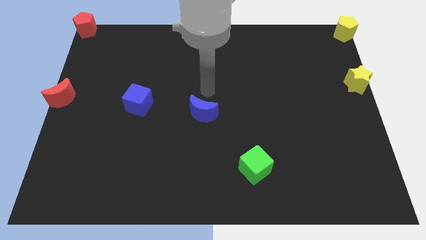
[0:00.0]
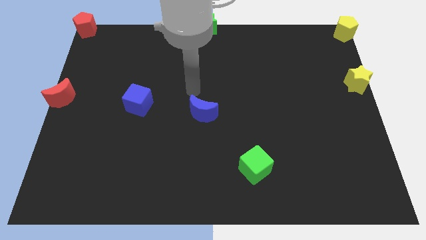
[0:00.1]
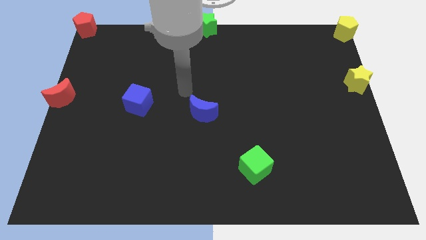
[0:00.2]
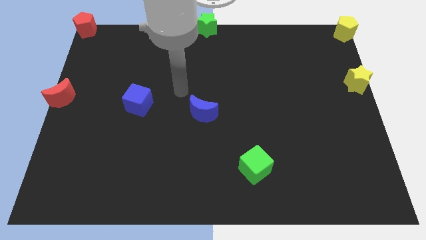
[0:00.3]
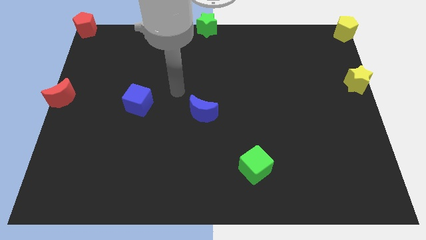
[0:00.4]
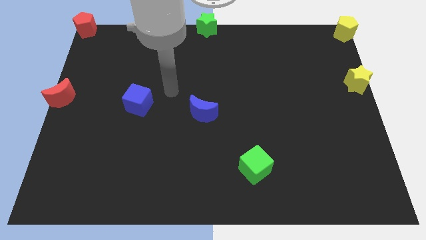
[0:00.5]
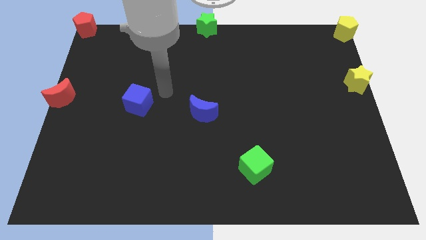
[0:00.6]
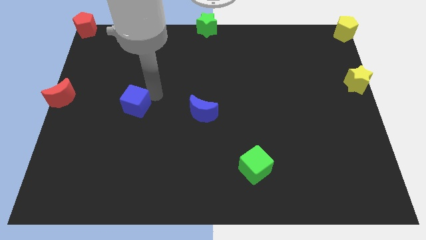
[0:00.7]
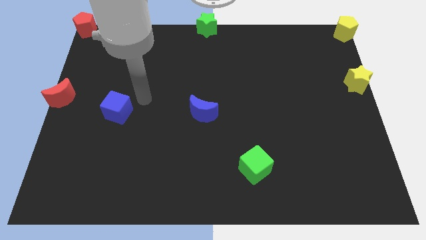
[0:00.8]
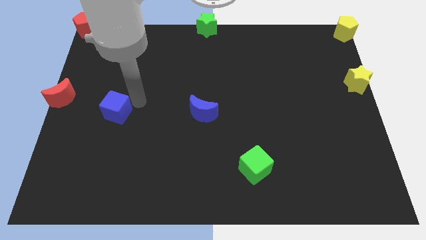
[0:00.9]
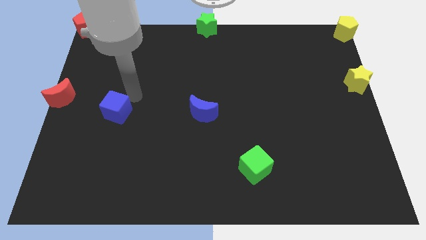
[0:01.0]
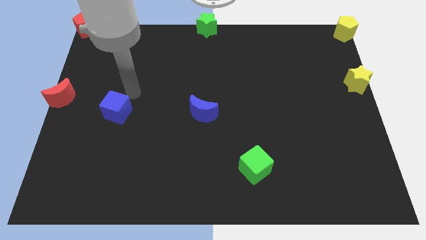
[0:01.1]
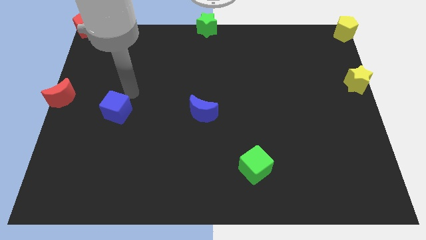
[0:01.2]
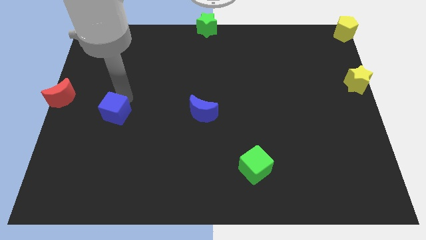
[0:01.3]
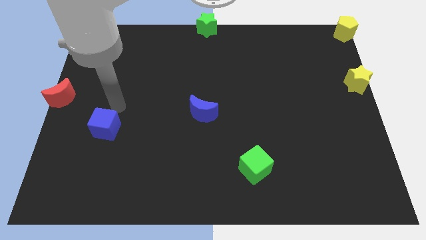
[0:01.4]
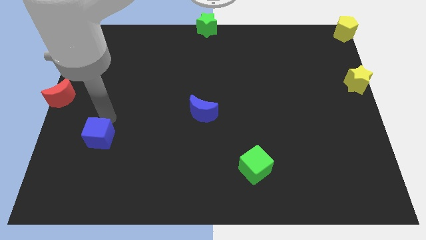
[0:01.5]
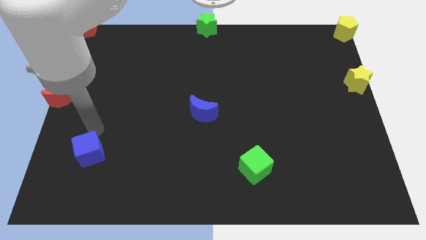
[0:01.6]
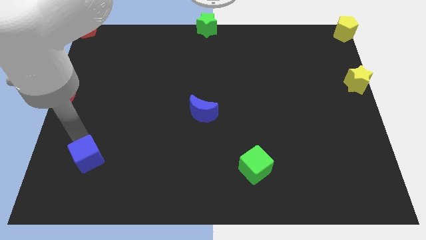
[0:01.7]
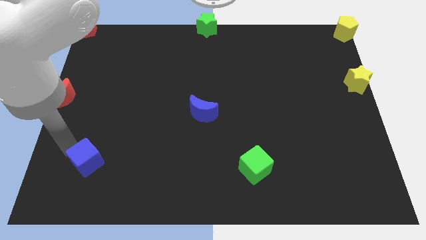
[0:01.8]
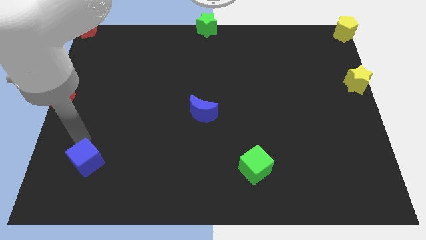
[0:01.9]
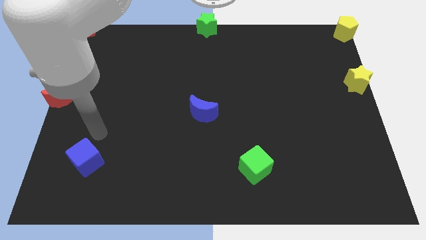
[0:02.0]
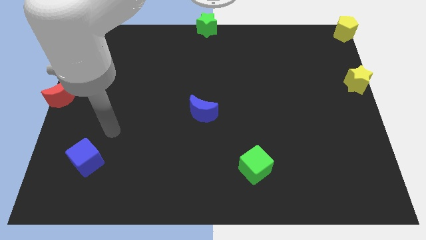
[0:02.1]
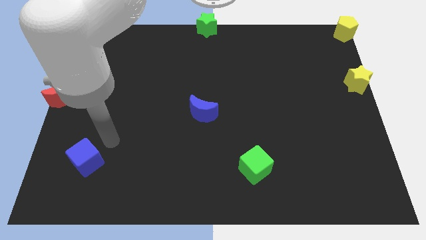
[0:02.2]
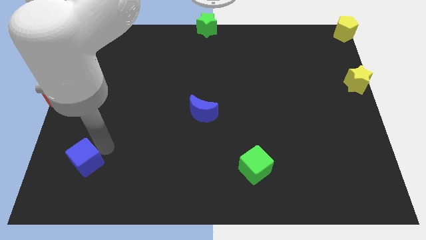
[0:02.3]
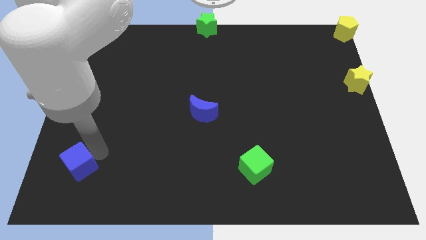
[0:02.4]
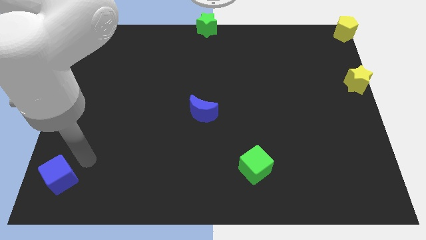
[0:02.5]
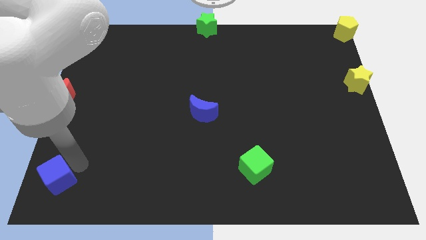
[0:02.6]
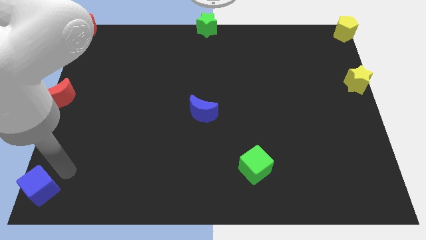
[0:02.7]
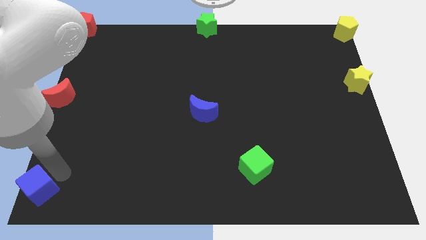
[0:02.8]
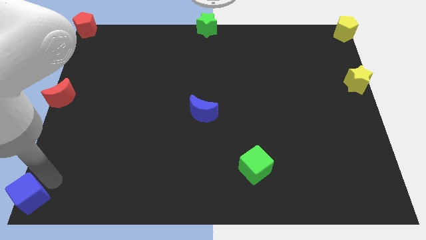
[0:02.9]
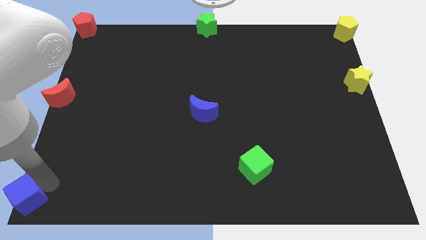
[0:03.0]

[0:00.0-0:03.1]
place the blue cube at the bottom left corner of the board

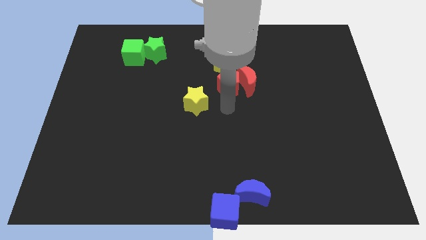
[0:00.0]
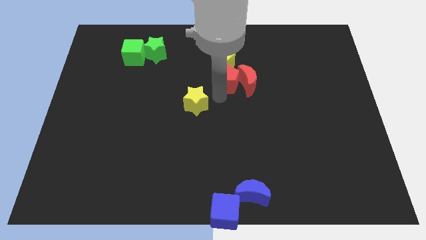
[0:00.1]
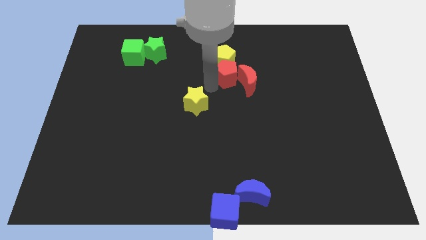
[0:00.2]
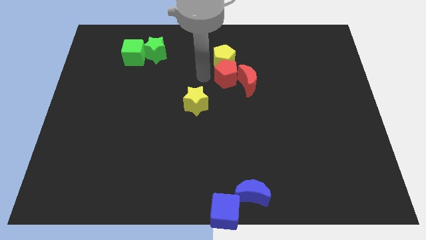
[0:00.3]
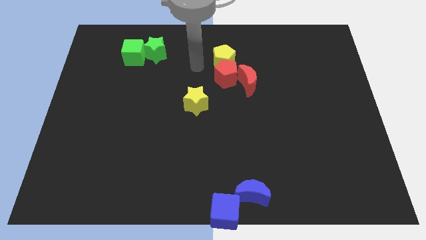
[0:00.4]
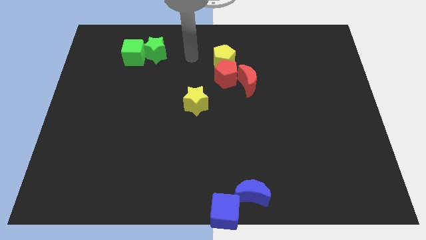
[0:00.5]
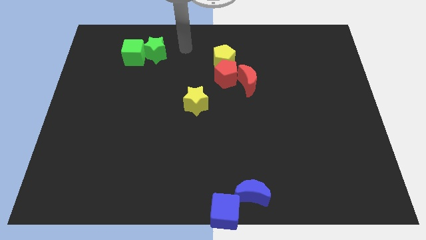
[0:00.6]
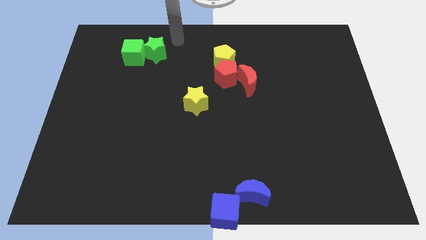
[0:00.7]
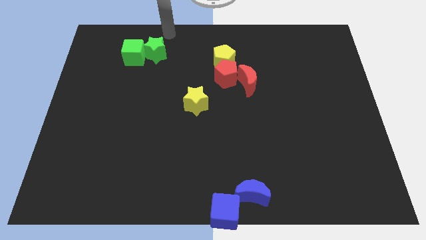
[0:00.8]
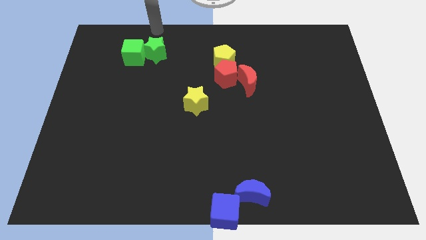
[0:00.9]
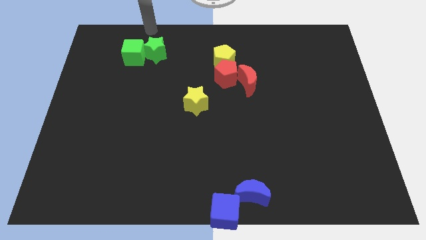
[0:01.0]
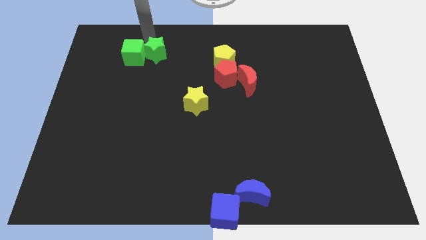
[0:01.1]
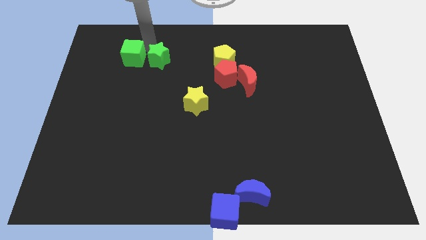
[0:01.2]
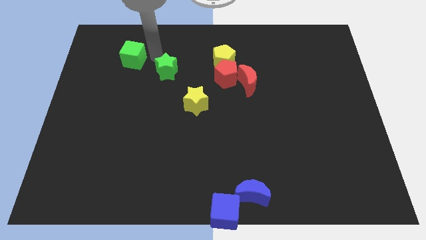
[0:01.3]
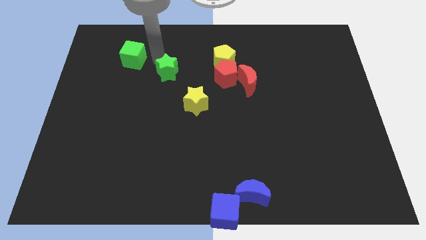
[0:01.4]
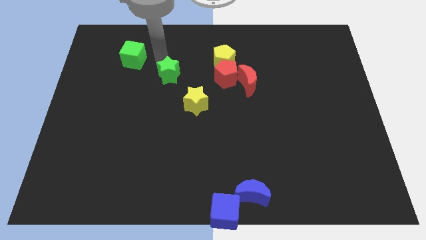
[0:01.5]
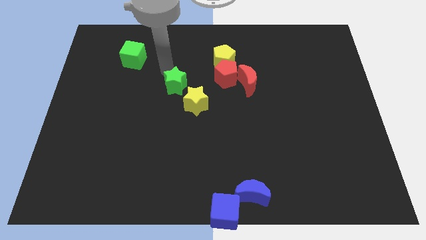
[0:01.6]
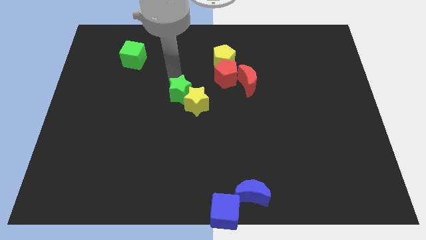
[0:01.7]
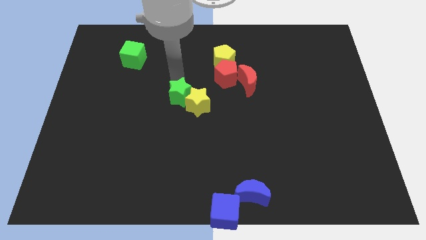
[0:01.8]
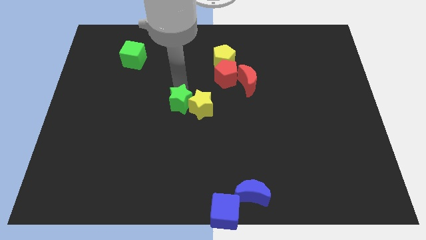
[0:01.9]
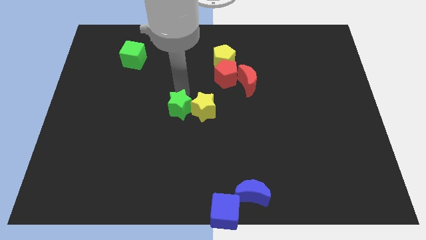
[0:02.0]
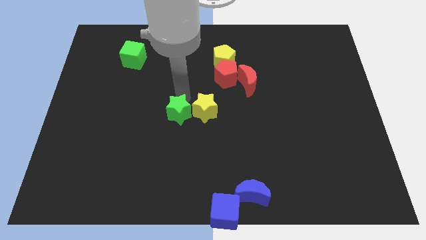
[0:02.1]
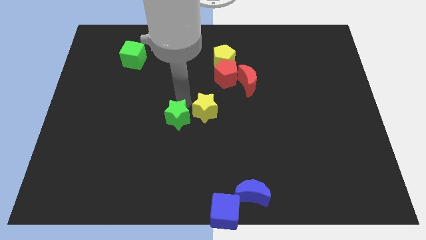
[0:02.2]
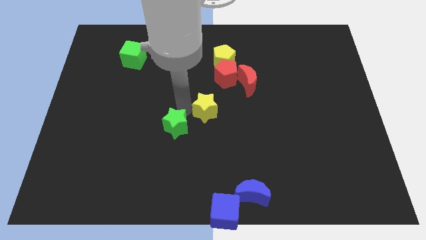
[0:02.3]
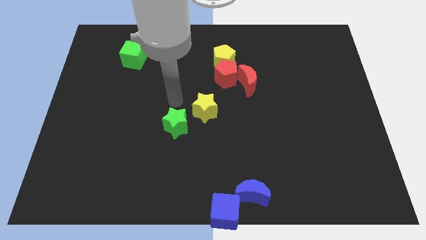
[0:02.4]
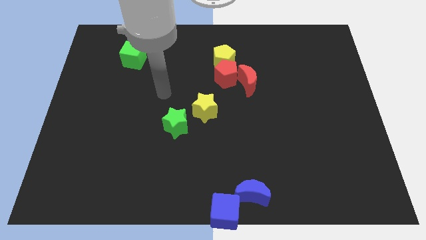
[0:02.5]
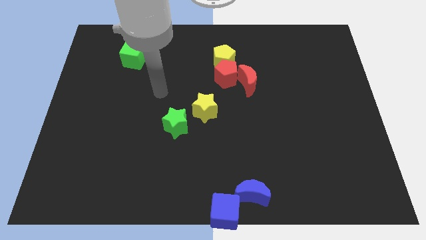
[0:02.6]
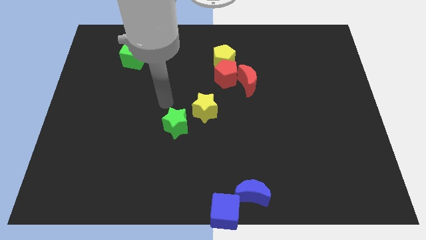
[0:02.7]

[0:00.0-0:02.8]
separate green star away from green cube

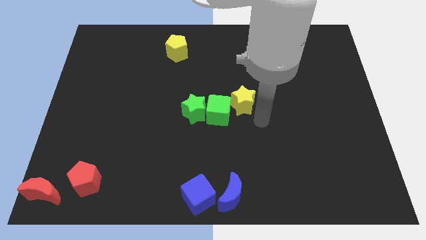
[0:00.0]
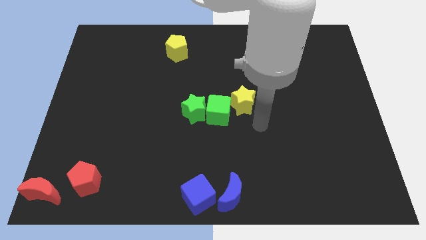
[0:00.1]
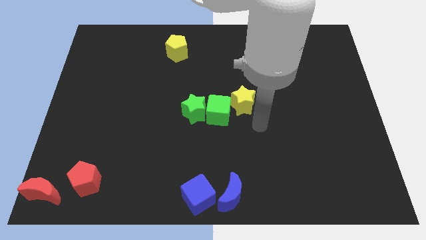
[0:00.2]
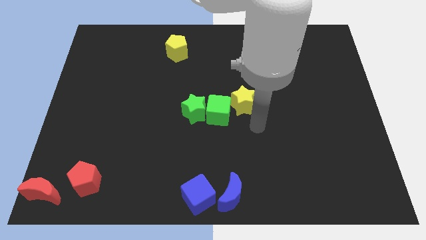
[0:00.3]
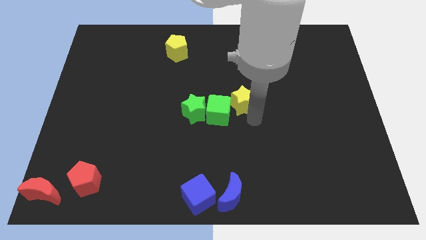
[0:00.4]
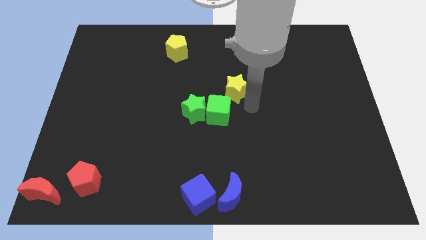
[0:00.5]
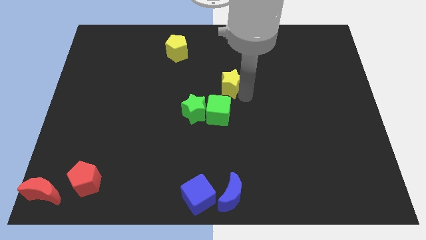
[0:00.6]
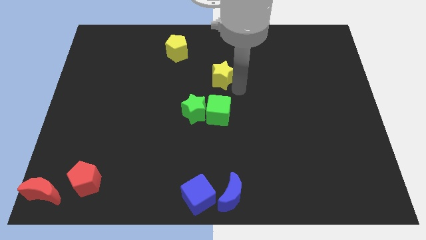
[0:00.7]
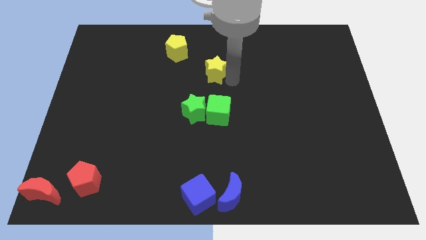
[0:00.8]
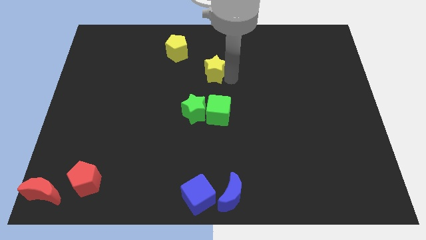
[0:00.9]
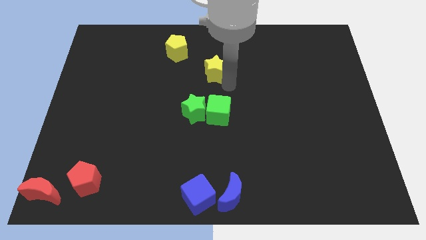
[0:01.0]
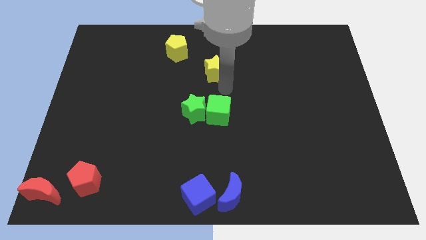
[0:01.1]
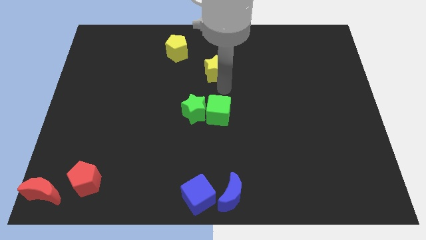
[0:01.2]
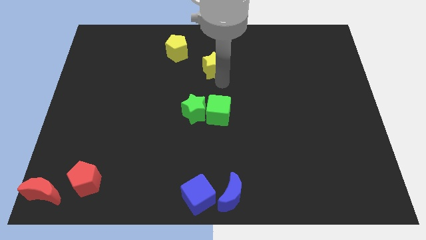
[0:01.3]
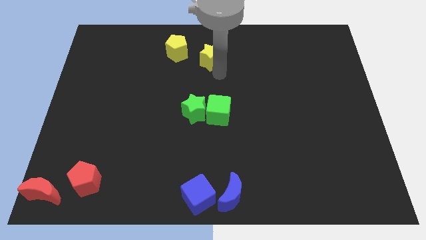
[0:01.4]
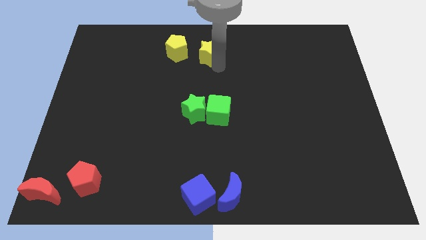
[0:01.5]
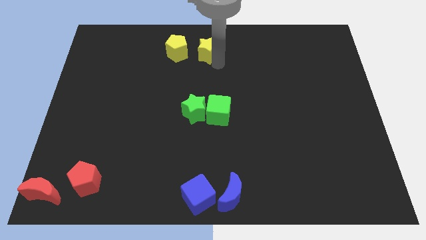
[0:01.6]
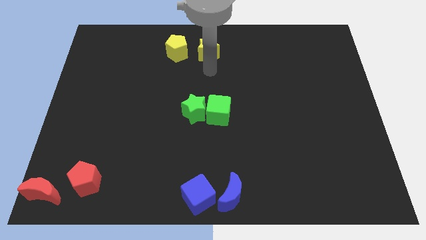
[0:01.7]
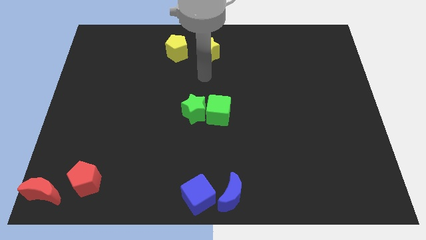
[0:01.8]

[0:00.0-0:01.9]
place the yellow star right to the yellow pentagon

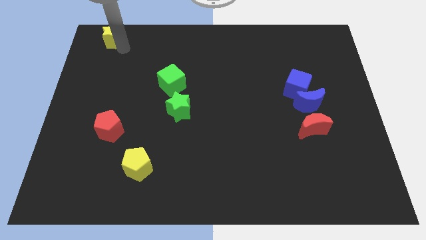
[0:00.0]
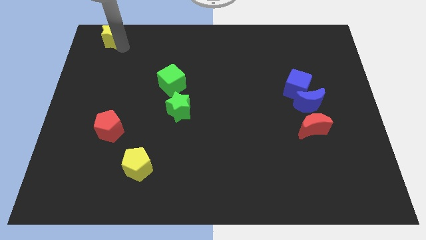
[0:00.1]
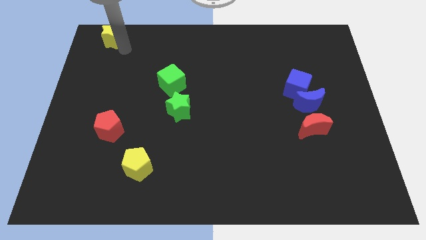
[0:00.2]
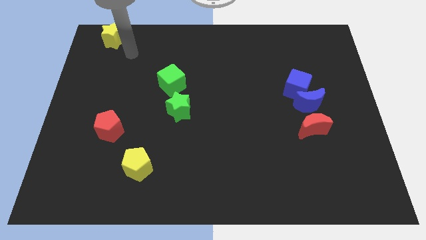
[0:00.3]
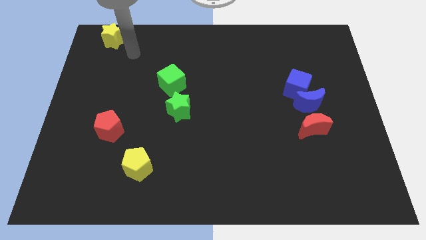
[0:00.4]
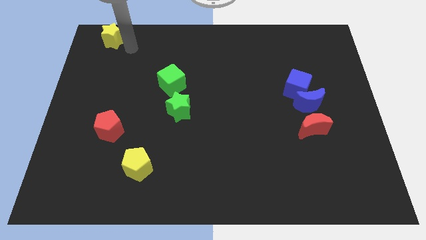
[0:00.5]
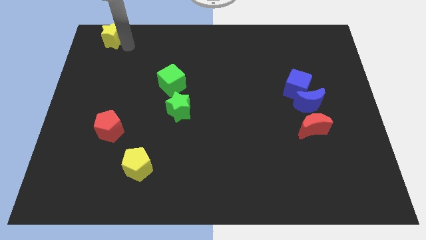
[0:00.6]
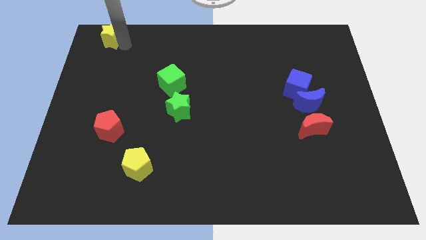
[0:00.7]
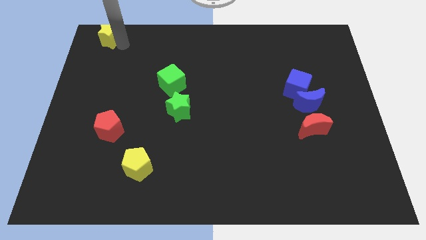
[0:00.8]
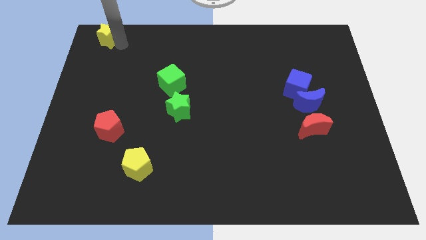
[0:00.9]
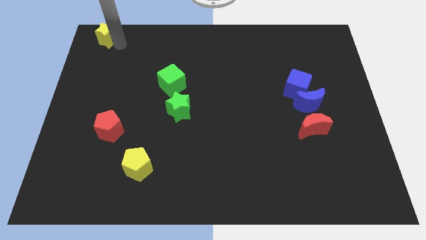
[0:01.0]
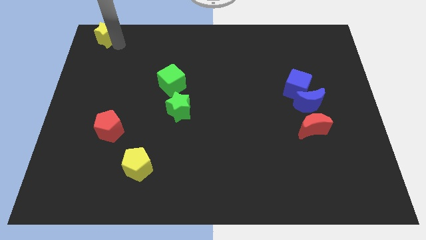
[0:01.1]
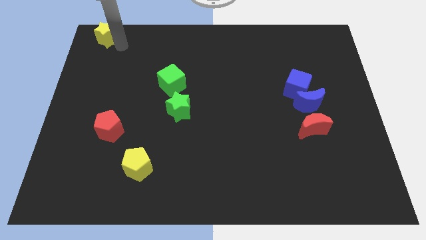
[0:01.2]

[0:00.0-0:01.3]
slightly push the yellow star to the top left to the board
